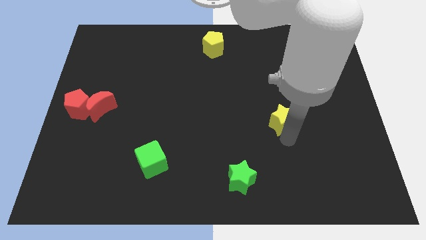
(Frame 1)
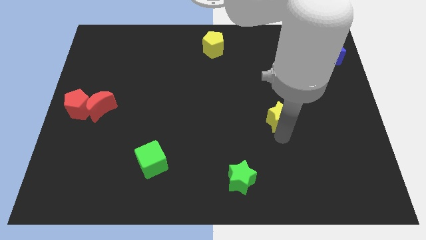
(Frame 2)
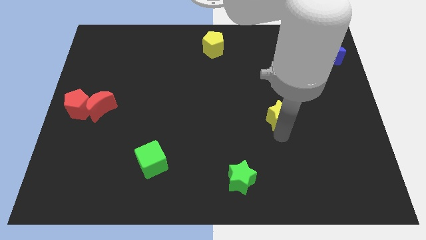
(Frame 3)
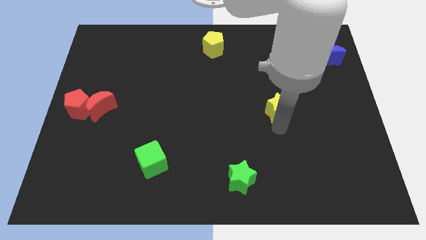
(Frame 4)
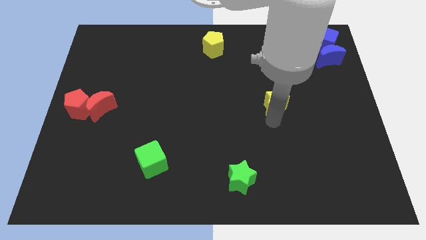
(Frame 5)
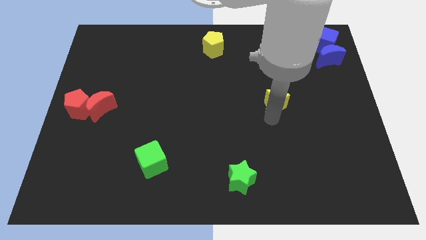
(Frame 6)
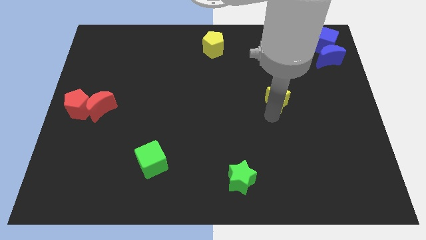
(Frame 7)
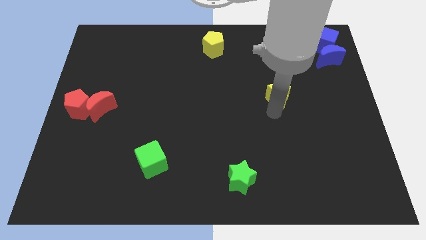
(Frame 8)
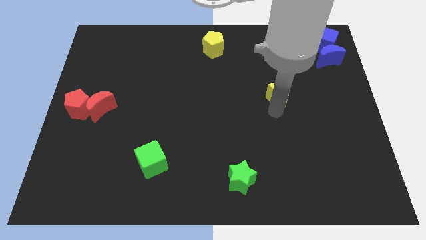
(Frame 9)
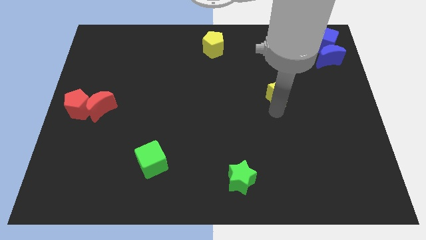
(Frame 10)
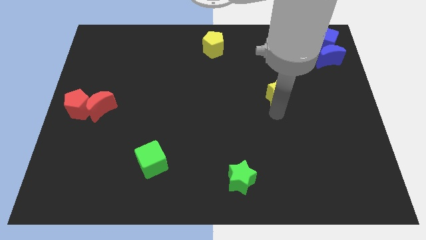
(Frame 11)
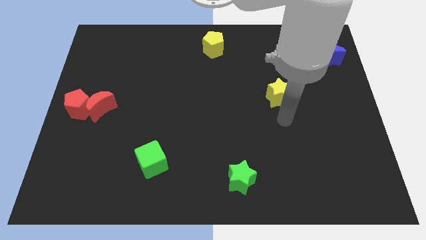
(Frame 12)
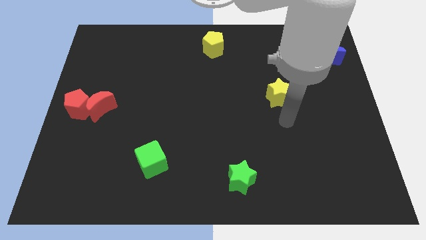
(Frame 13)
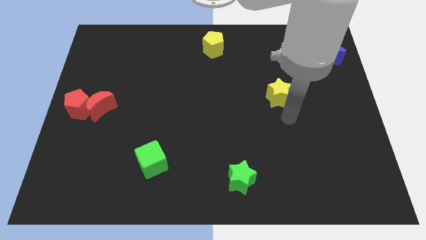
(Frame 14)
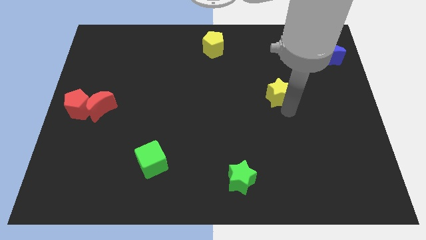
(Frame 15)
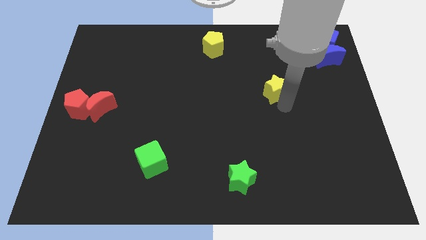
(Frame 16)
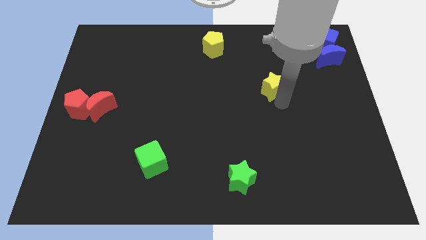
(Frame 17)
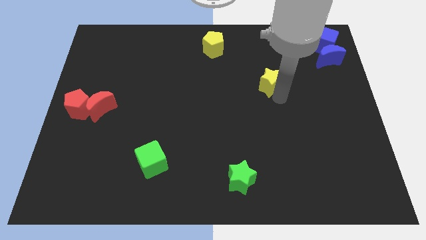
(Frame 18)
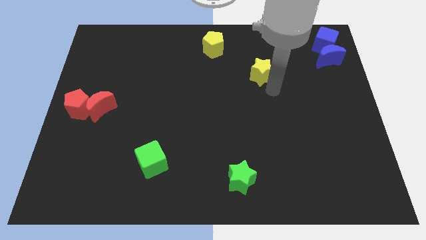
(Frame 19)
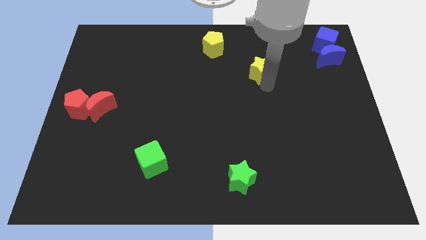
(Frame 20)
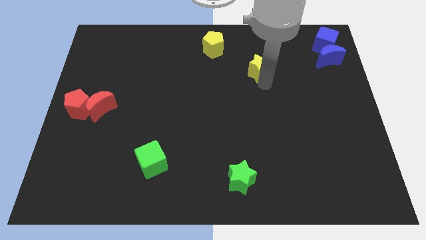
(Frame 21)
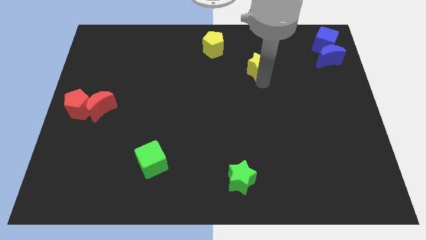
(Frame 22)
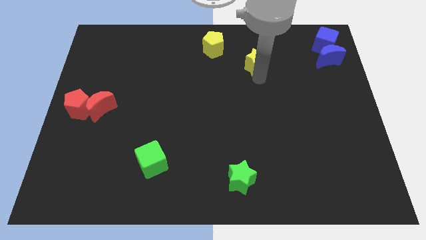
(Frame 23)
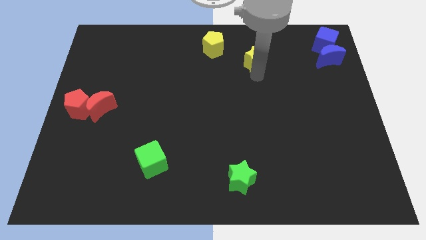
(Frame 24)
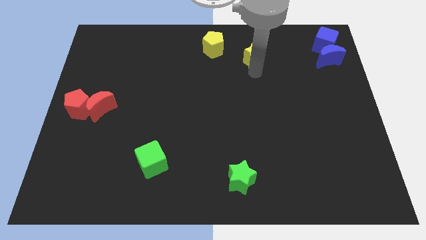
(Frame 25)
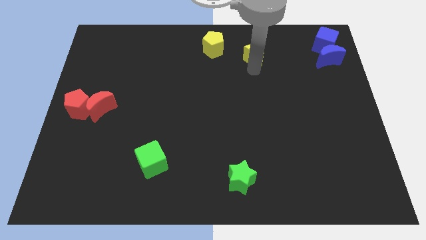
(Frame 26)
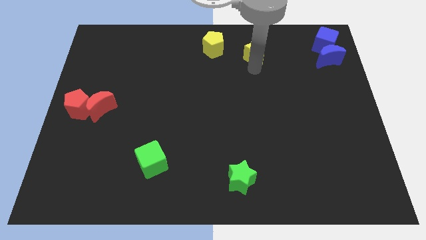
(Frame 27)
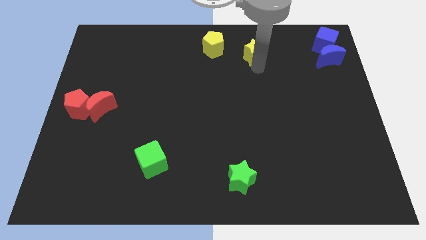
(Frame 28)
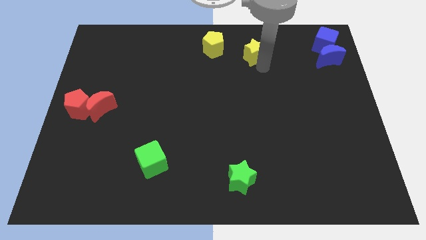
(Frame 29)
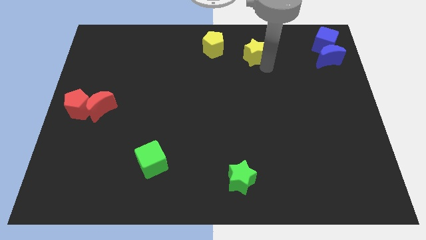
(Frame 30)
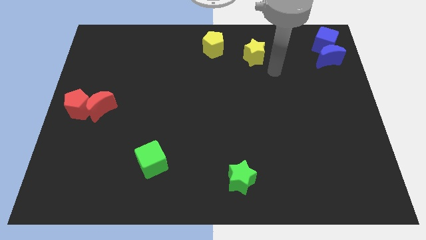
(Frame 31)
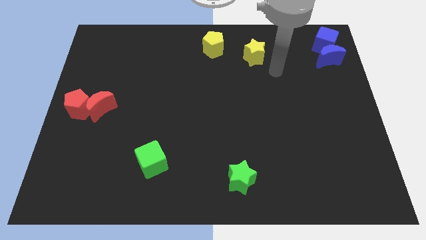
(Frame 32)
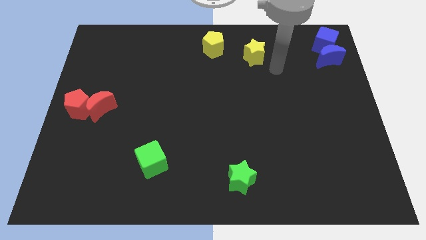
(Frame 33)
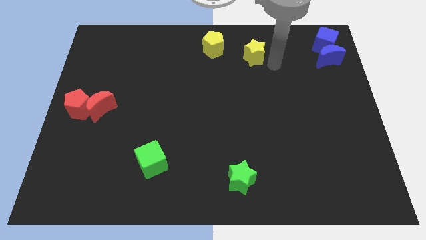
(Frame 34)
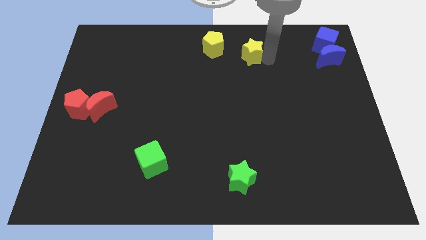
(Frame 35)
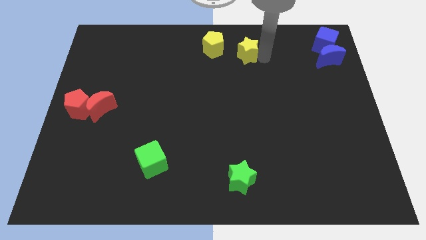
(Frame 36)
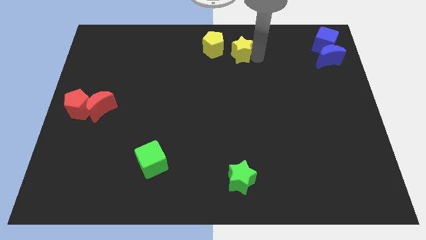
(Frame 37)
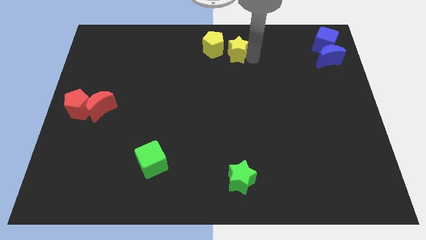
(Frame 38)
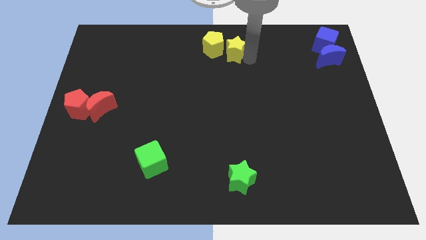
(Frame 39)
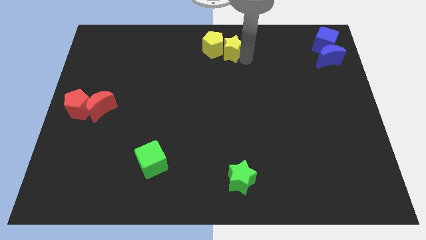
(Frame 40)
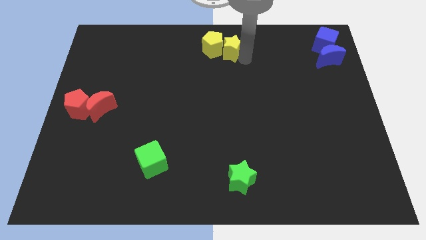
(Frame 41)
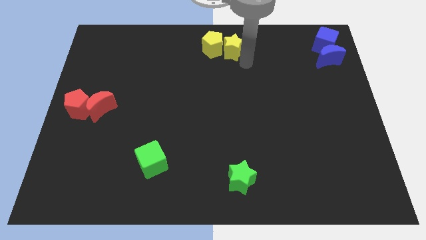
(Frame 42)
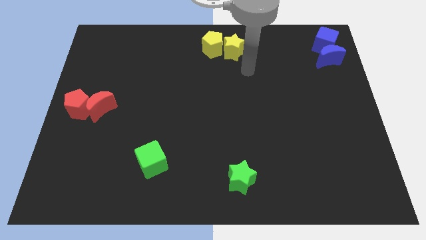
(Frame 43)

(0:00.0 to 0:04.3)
place a yellow star on the right isde of the pentagon

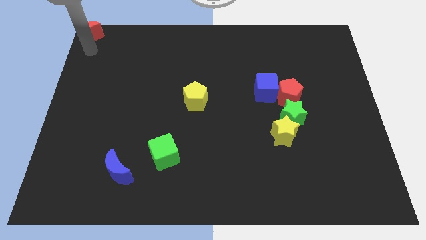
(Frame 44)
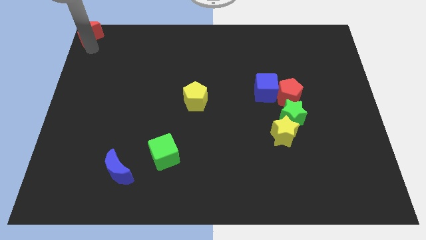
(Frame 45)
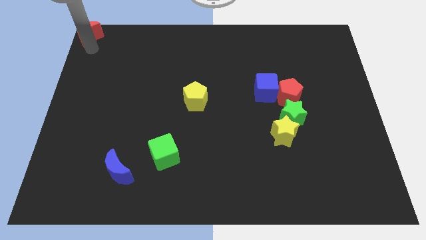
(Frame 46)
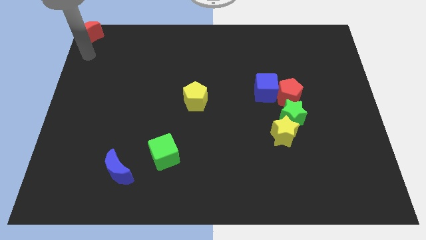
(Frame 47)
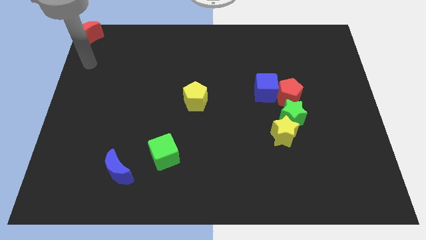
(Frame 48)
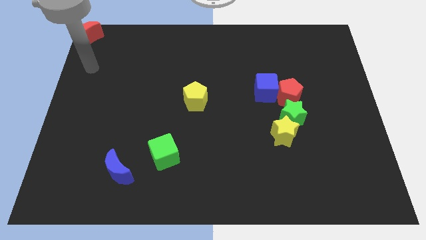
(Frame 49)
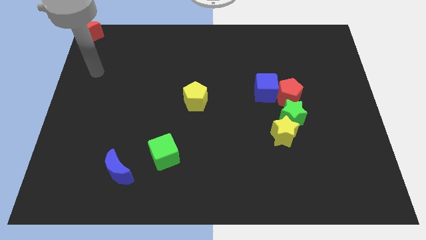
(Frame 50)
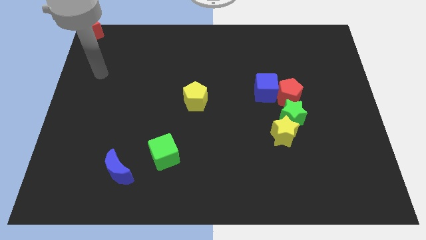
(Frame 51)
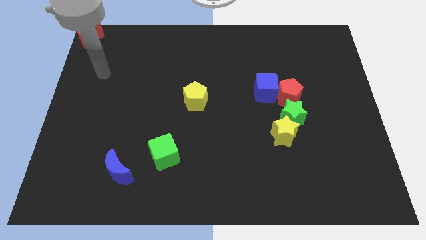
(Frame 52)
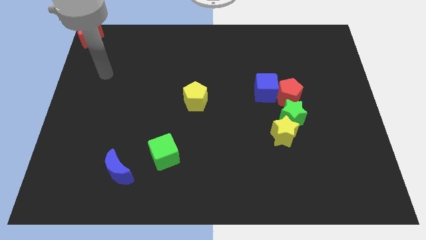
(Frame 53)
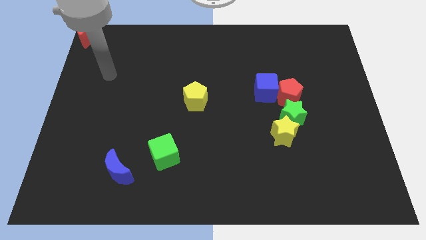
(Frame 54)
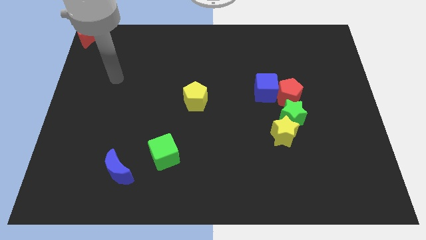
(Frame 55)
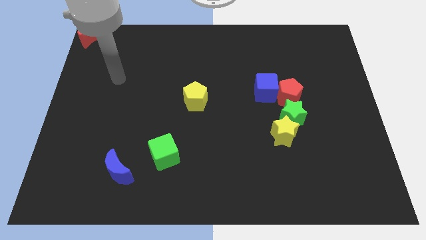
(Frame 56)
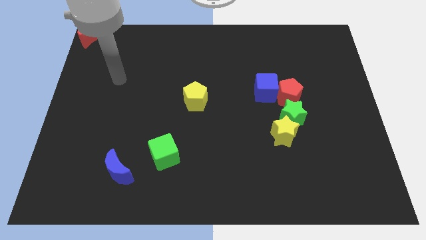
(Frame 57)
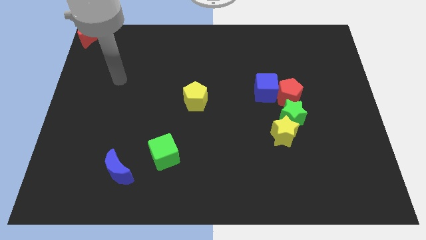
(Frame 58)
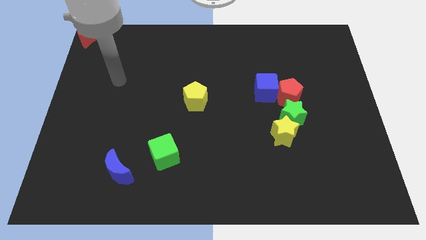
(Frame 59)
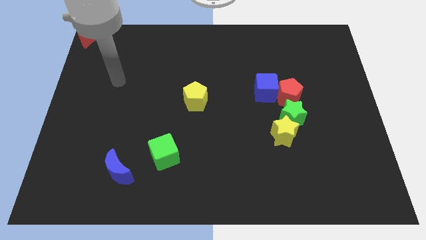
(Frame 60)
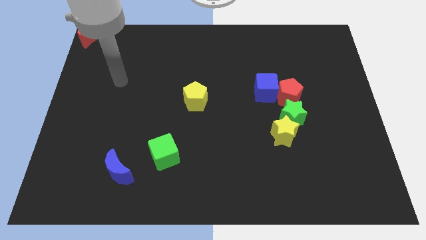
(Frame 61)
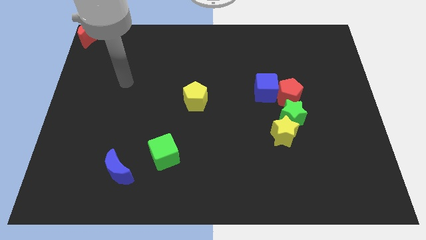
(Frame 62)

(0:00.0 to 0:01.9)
go away from the red moon

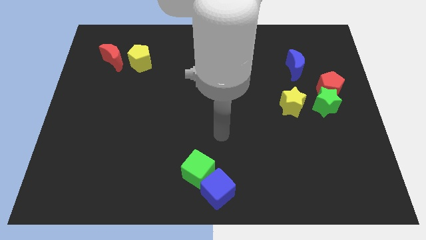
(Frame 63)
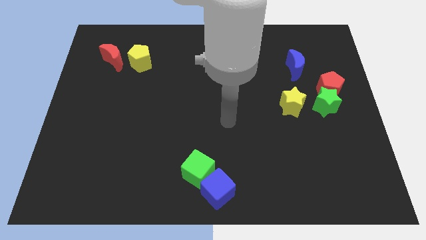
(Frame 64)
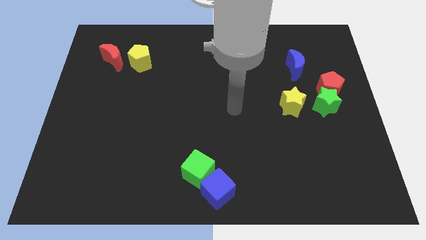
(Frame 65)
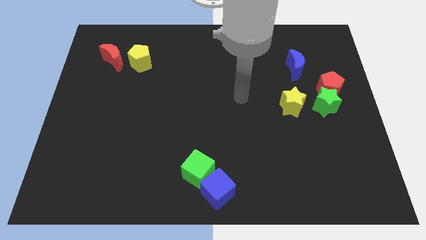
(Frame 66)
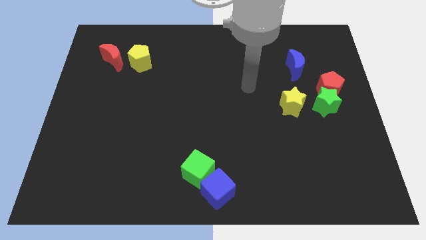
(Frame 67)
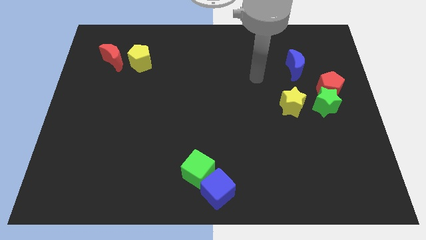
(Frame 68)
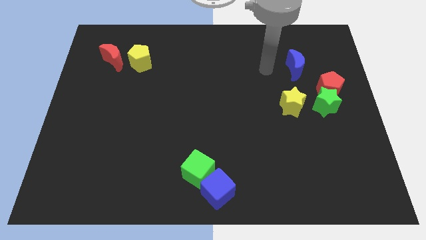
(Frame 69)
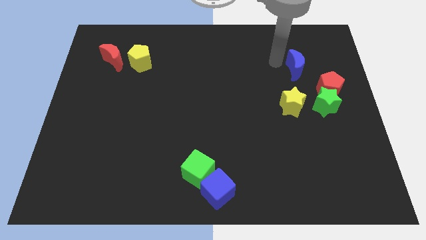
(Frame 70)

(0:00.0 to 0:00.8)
move the arm towards blue crescent

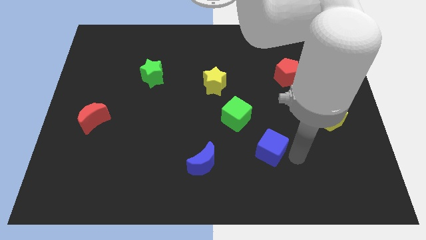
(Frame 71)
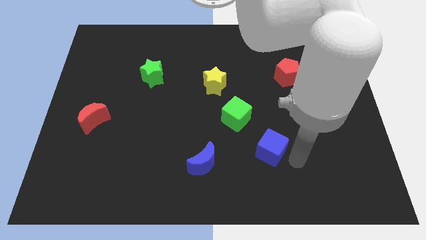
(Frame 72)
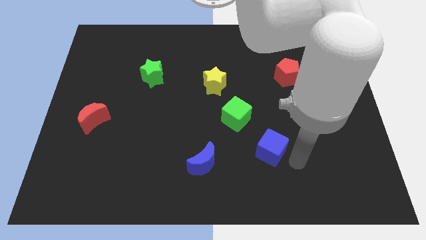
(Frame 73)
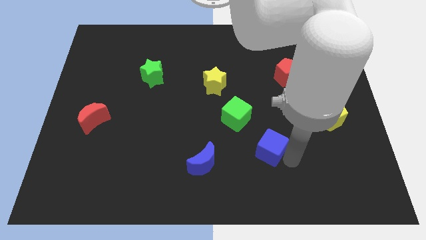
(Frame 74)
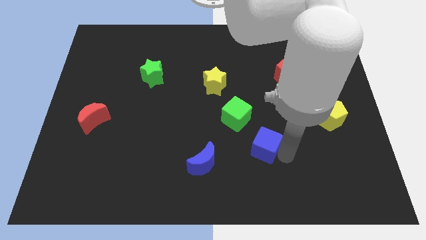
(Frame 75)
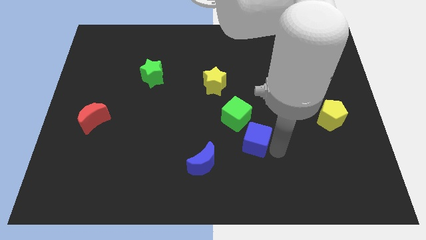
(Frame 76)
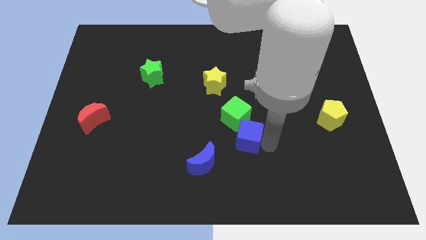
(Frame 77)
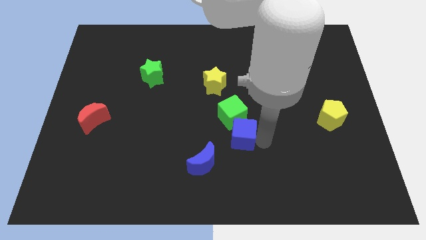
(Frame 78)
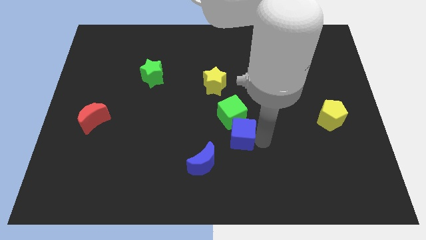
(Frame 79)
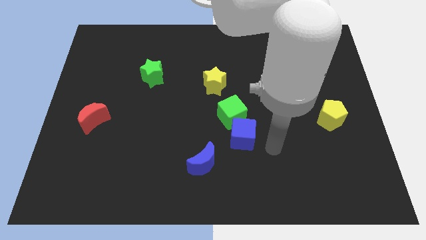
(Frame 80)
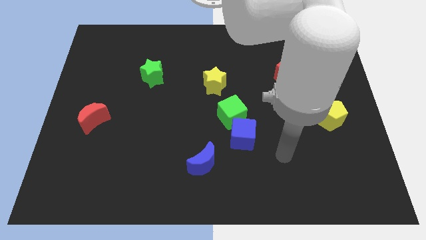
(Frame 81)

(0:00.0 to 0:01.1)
push the blue cube into the bottom of green cube

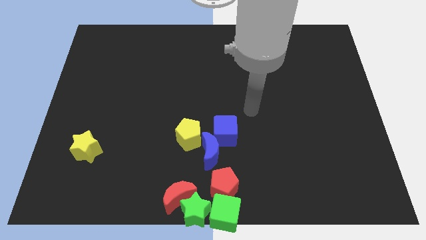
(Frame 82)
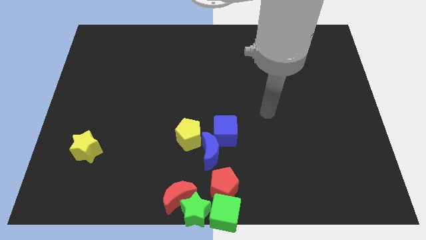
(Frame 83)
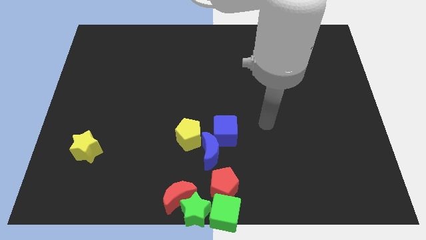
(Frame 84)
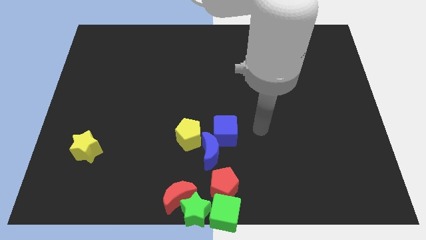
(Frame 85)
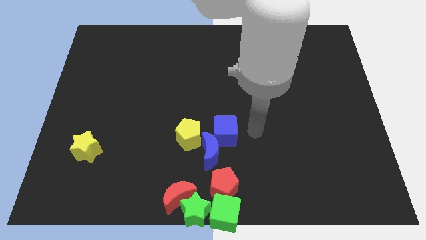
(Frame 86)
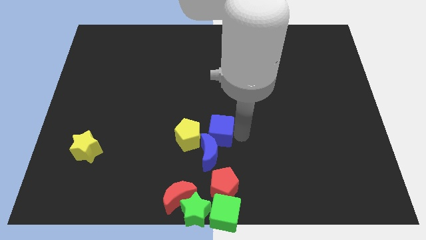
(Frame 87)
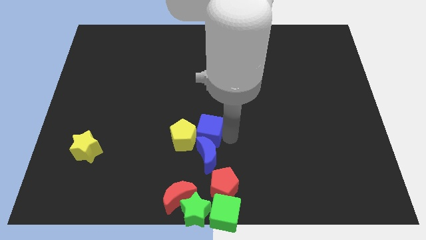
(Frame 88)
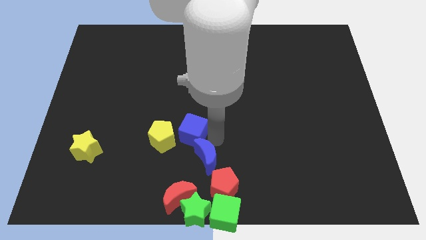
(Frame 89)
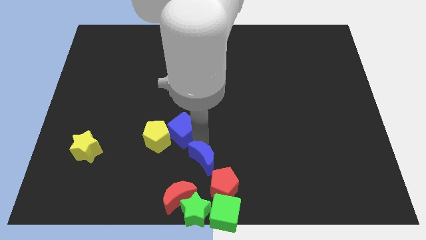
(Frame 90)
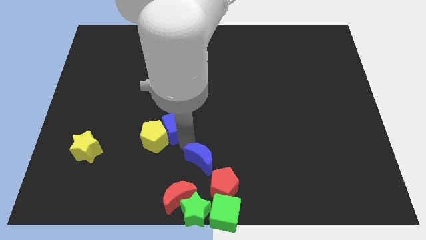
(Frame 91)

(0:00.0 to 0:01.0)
move the blue cube into the yellow pentagon
